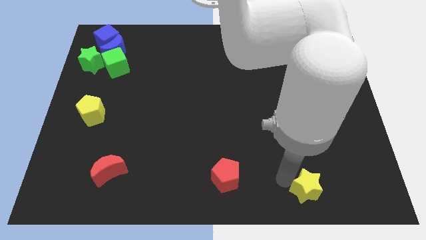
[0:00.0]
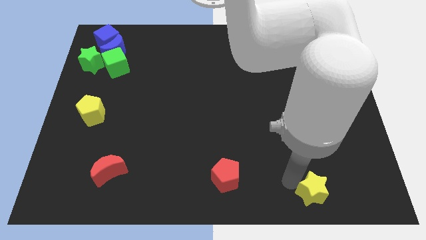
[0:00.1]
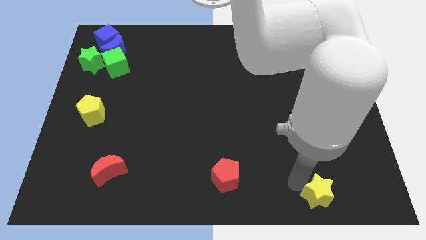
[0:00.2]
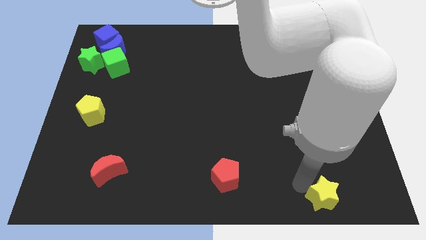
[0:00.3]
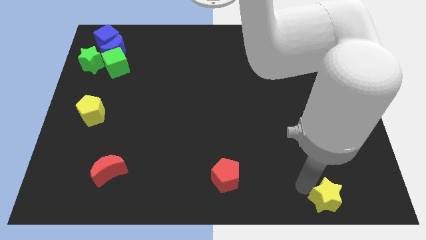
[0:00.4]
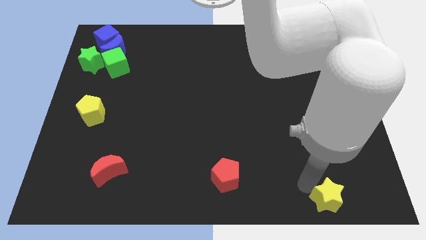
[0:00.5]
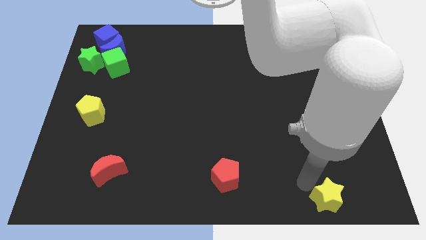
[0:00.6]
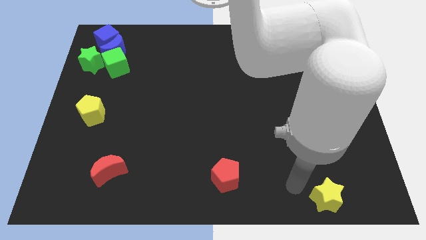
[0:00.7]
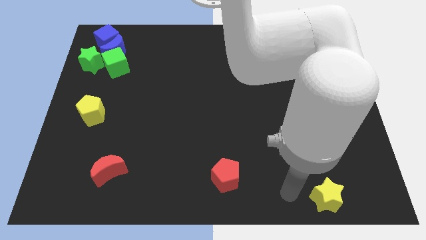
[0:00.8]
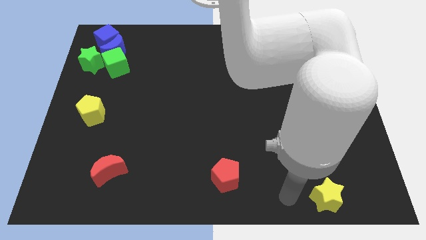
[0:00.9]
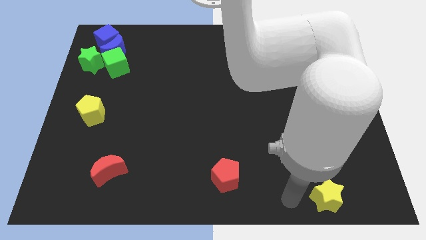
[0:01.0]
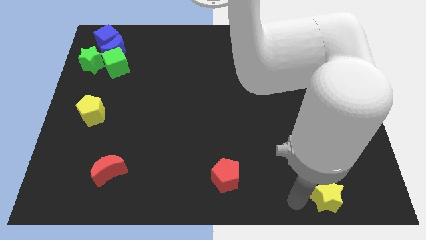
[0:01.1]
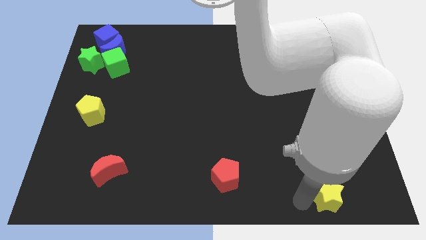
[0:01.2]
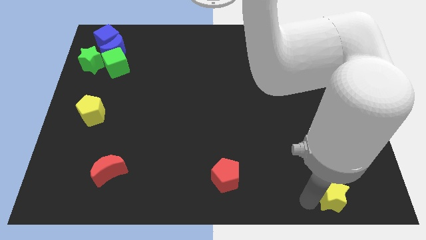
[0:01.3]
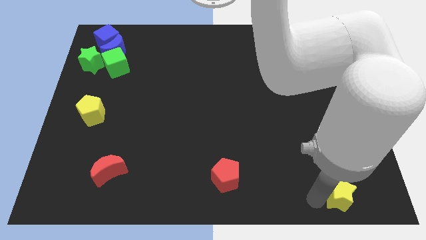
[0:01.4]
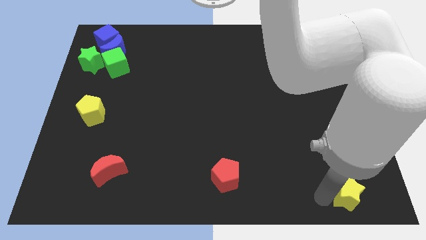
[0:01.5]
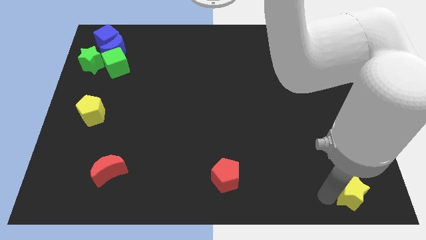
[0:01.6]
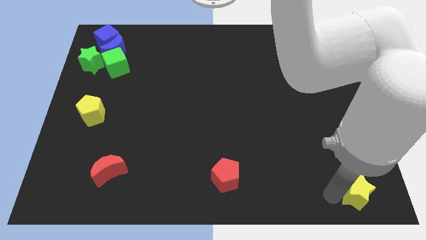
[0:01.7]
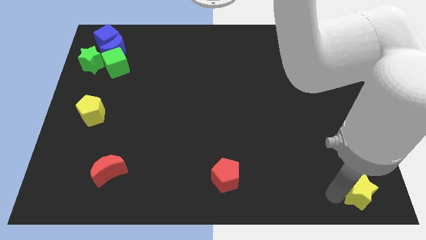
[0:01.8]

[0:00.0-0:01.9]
put the yellow star at the bottom right side

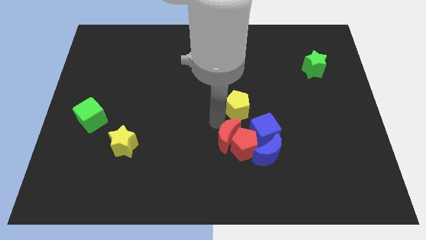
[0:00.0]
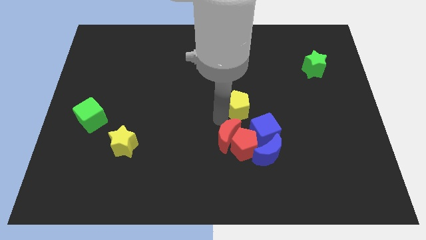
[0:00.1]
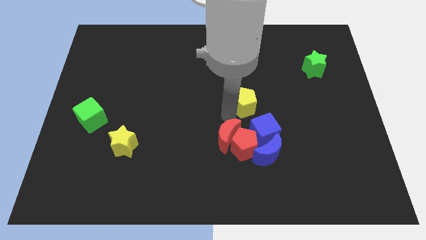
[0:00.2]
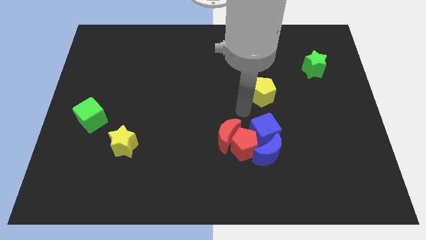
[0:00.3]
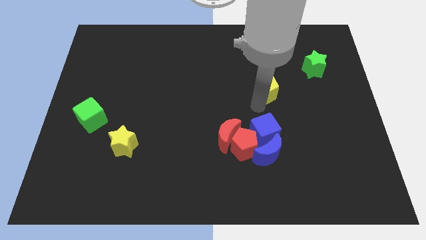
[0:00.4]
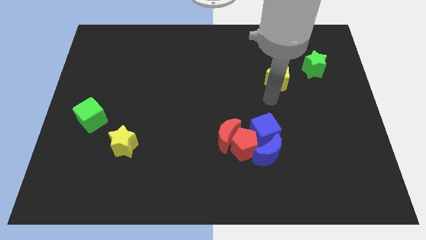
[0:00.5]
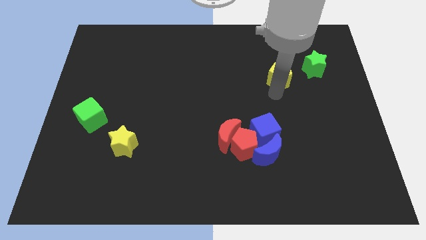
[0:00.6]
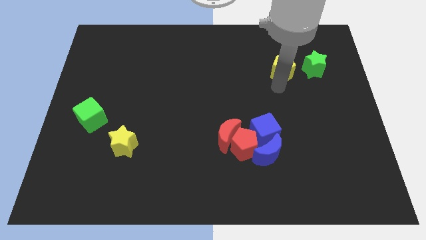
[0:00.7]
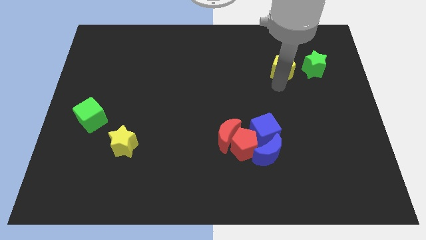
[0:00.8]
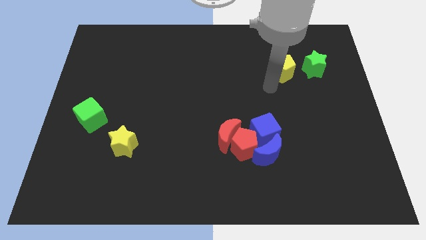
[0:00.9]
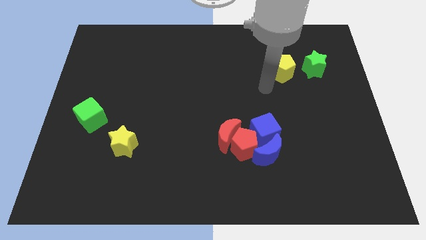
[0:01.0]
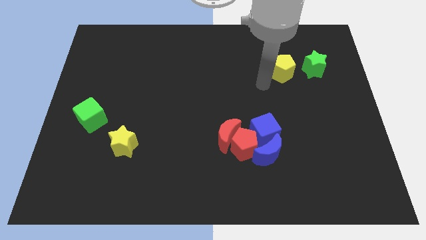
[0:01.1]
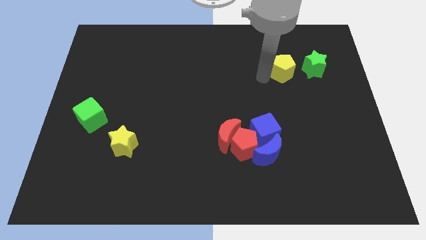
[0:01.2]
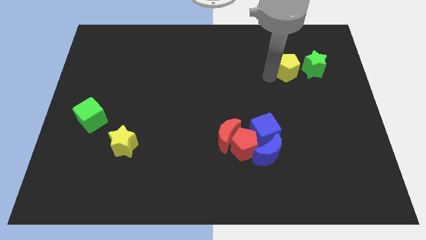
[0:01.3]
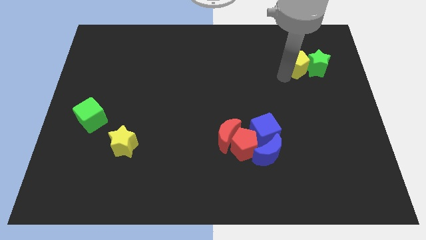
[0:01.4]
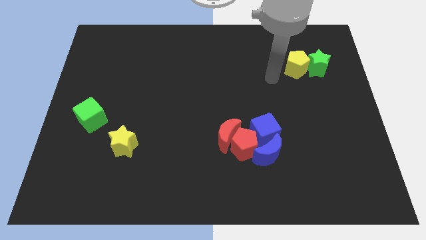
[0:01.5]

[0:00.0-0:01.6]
push the yellow pentagon into the green star to the left

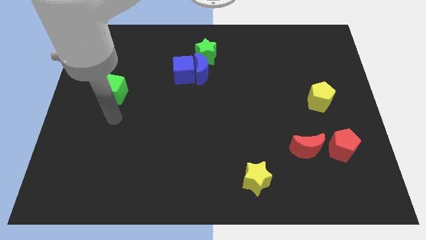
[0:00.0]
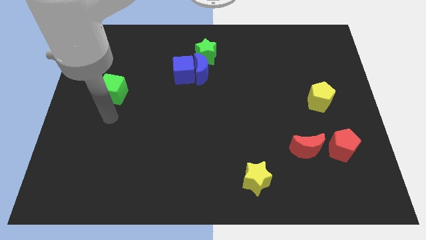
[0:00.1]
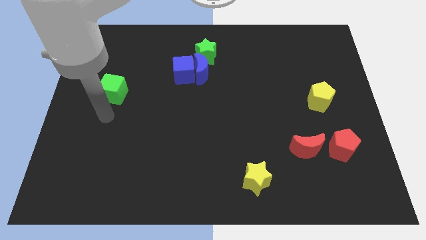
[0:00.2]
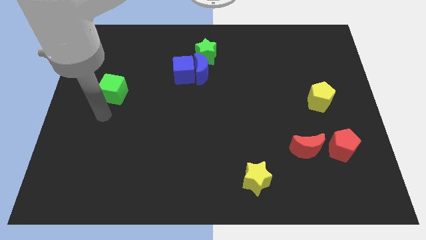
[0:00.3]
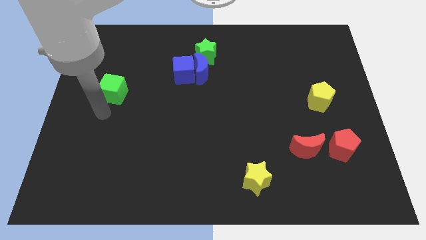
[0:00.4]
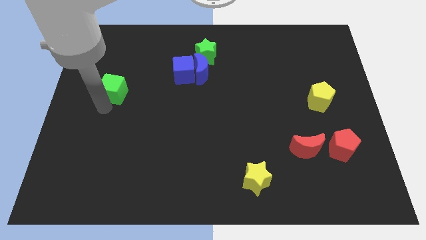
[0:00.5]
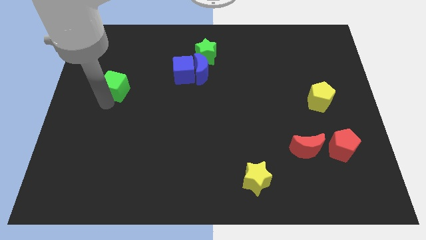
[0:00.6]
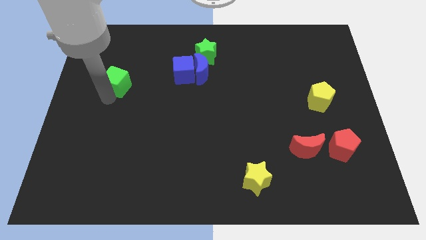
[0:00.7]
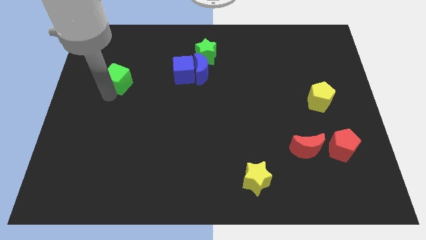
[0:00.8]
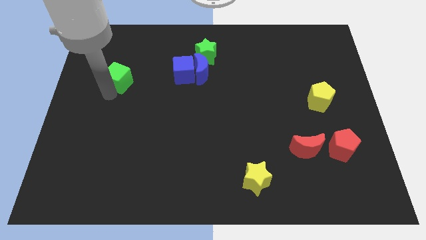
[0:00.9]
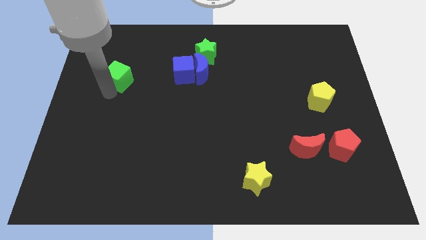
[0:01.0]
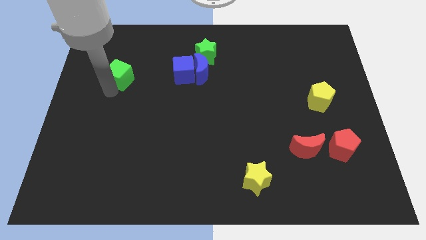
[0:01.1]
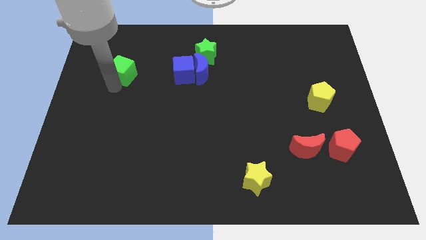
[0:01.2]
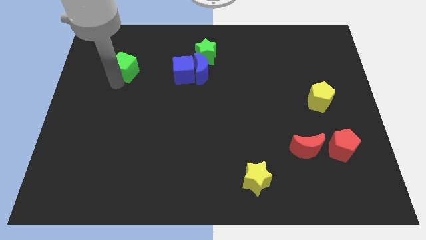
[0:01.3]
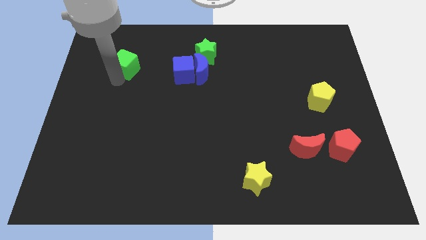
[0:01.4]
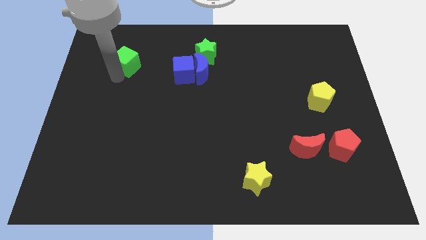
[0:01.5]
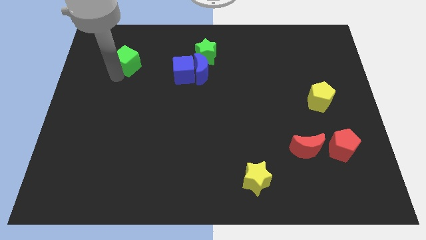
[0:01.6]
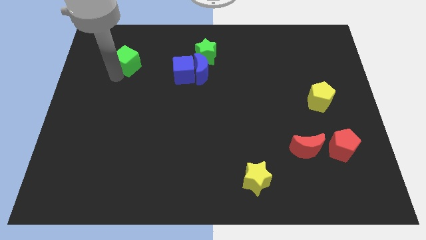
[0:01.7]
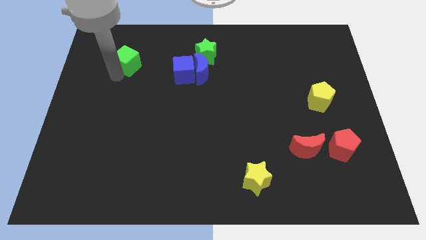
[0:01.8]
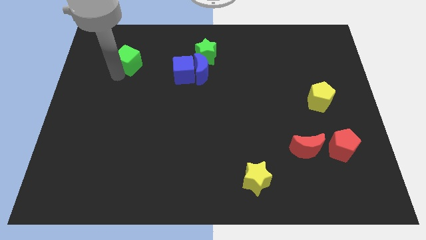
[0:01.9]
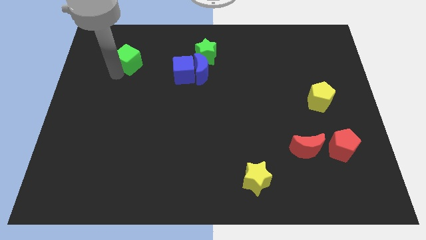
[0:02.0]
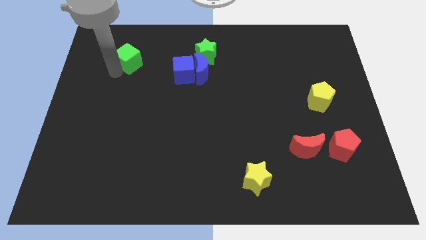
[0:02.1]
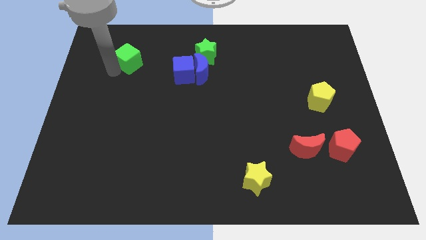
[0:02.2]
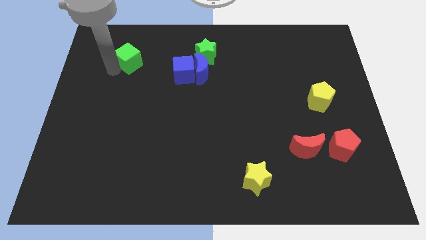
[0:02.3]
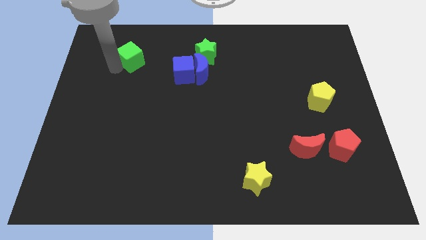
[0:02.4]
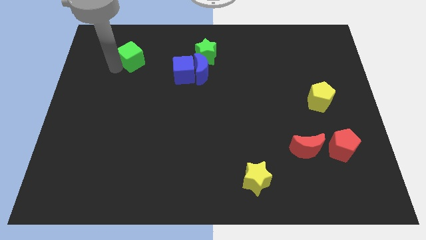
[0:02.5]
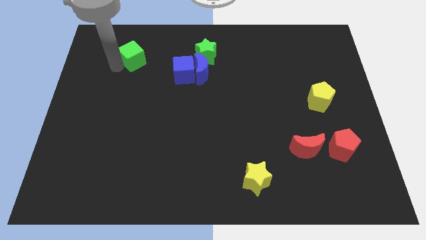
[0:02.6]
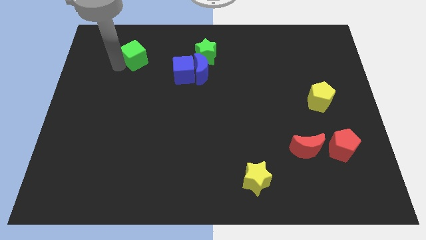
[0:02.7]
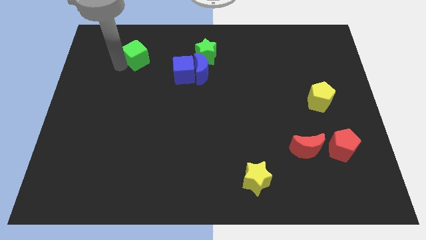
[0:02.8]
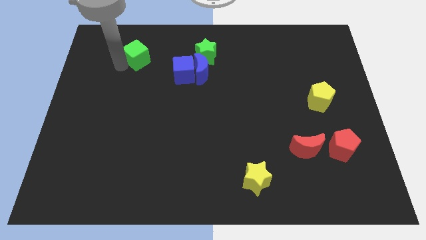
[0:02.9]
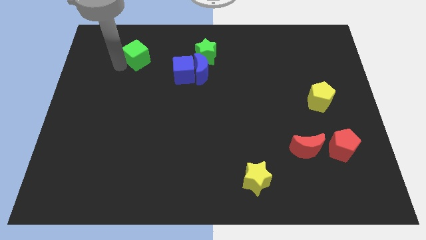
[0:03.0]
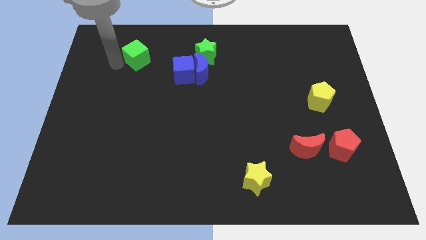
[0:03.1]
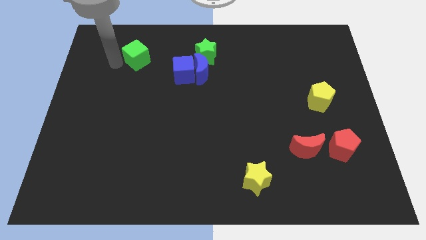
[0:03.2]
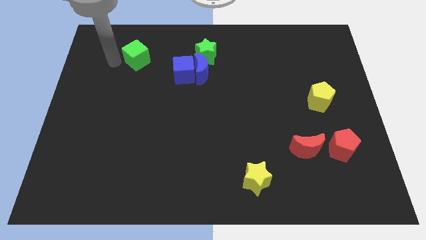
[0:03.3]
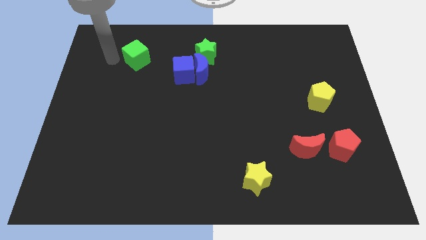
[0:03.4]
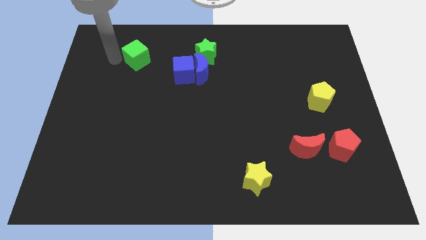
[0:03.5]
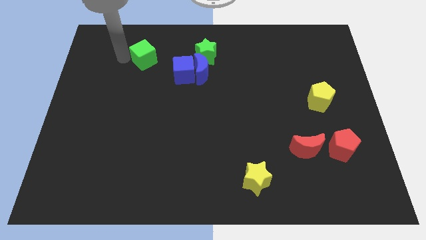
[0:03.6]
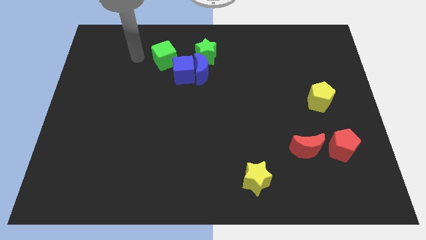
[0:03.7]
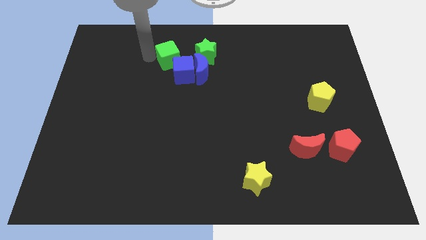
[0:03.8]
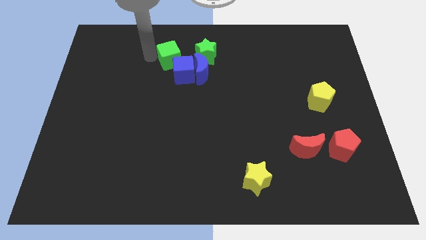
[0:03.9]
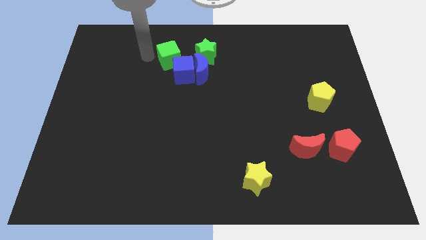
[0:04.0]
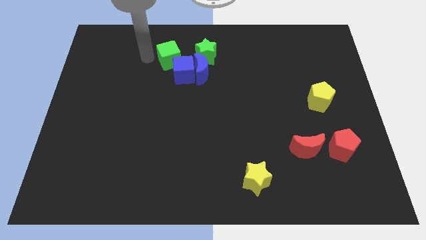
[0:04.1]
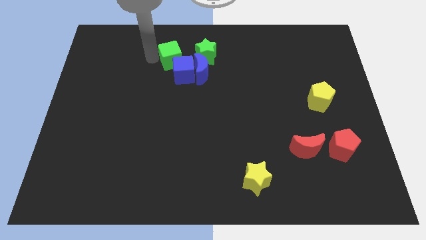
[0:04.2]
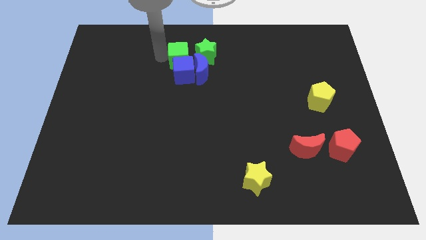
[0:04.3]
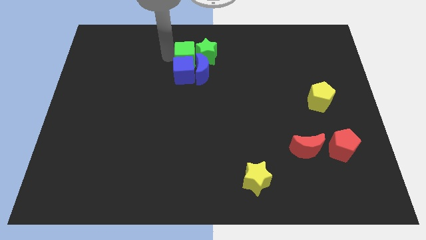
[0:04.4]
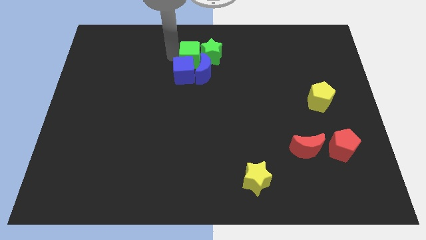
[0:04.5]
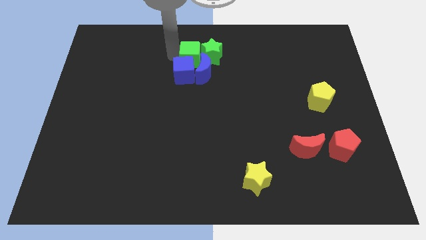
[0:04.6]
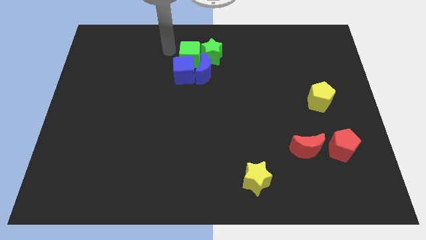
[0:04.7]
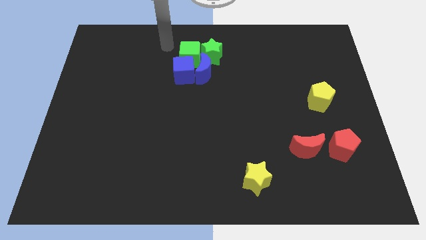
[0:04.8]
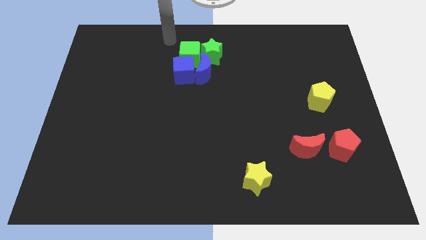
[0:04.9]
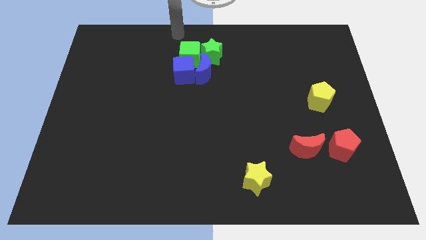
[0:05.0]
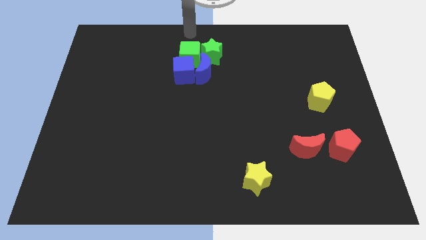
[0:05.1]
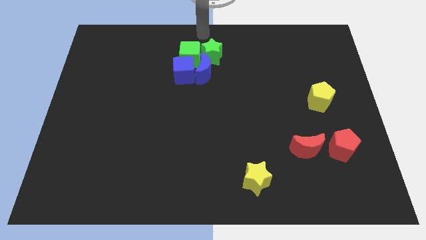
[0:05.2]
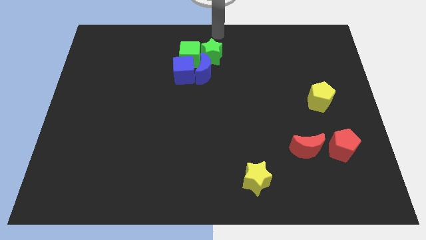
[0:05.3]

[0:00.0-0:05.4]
push the green cube to the left side of the green star
